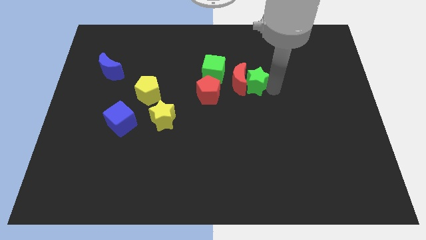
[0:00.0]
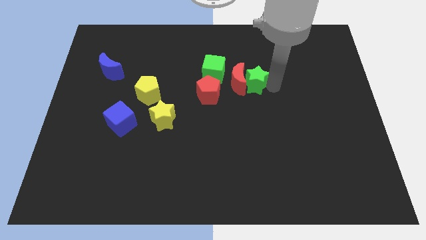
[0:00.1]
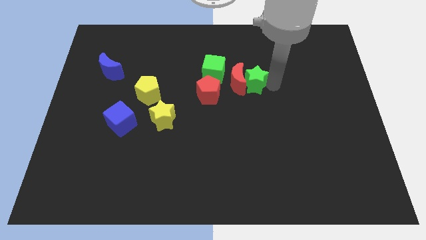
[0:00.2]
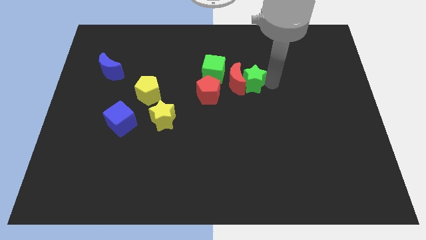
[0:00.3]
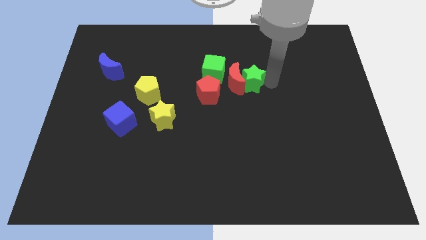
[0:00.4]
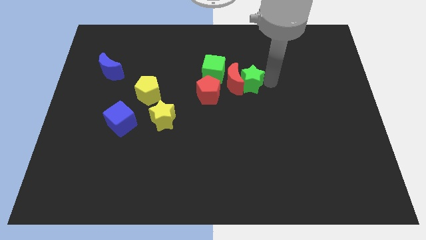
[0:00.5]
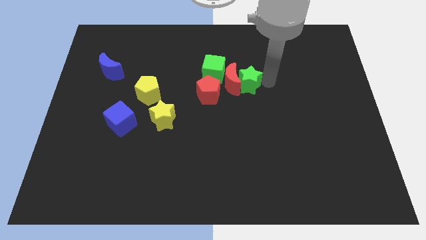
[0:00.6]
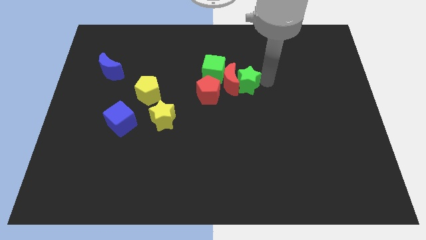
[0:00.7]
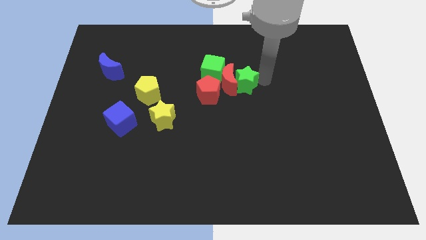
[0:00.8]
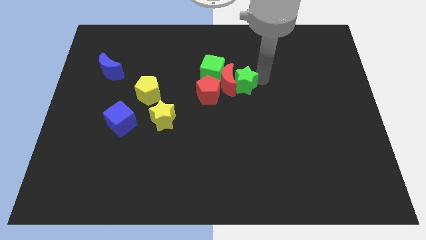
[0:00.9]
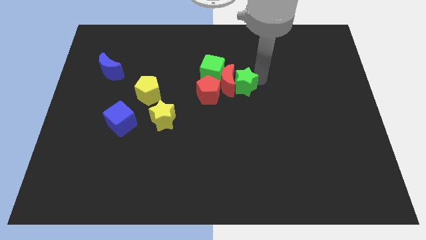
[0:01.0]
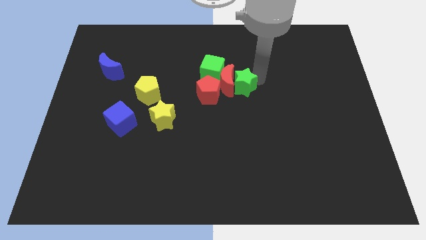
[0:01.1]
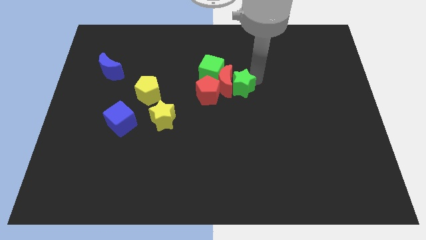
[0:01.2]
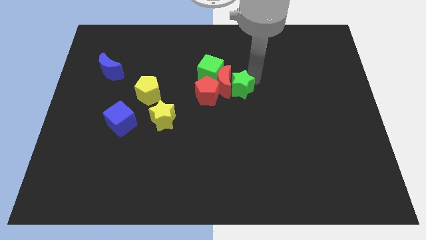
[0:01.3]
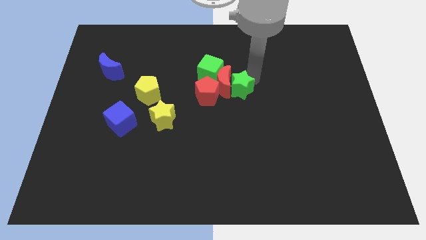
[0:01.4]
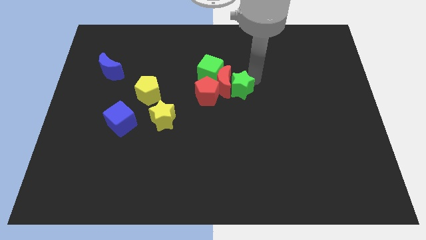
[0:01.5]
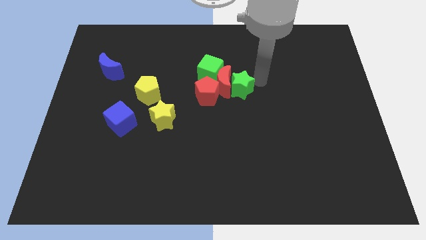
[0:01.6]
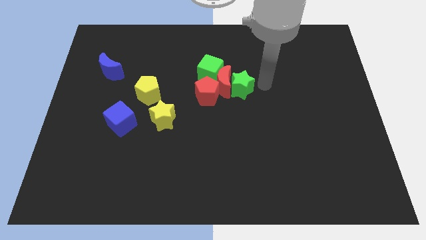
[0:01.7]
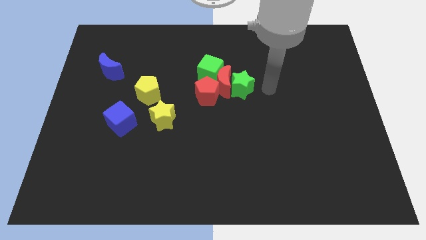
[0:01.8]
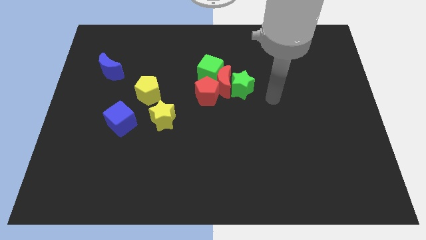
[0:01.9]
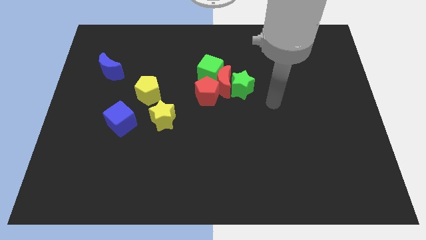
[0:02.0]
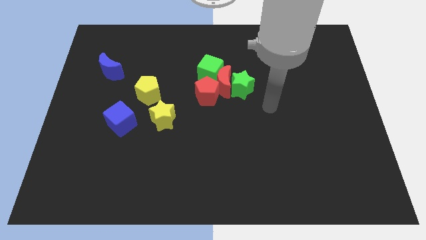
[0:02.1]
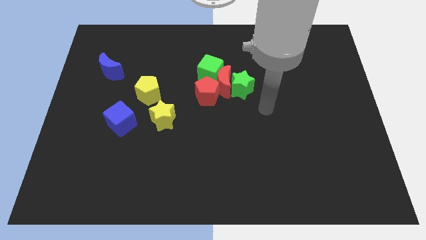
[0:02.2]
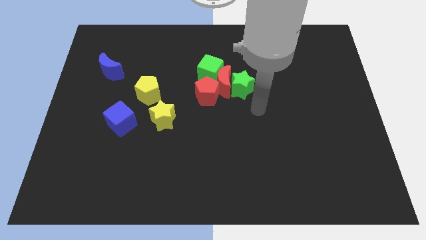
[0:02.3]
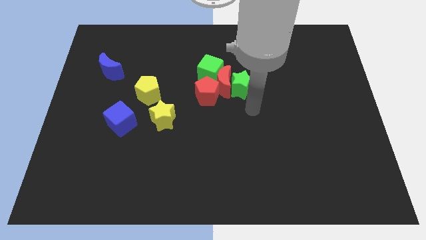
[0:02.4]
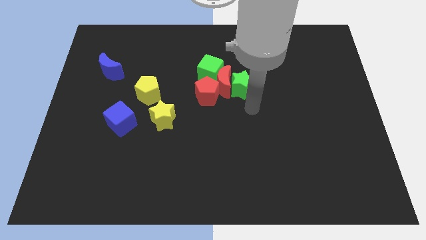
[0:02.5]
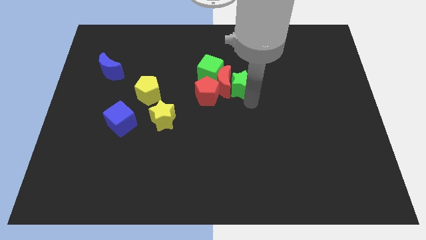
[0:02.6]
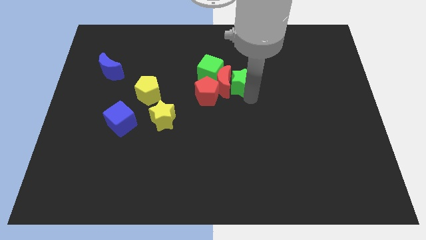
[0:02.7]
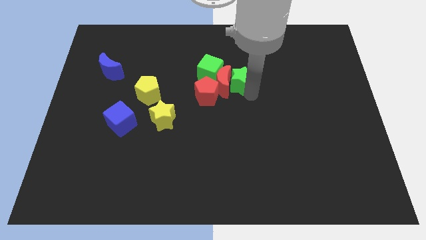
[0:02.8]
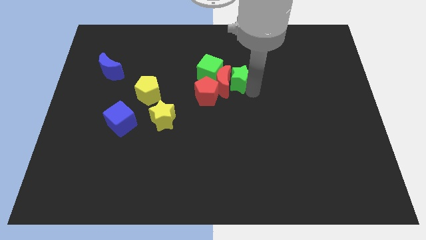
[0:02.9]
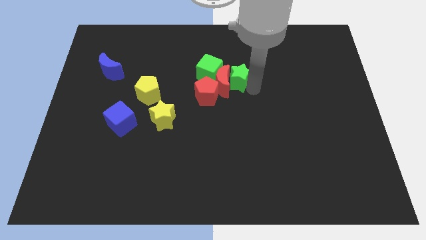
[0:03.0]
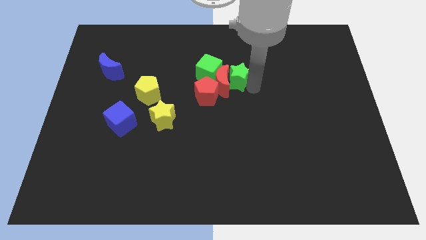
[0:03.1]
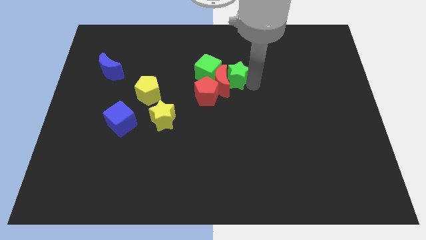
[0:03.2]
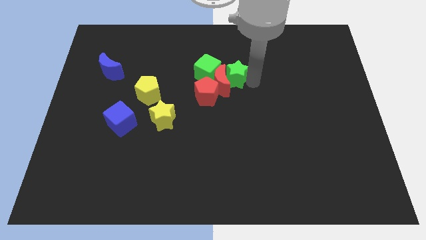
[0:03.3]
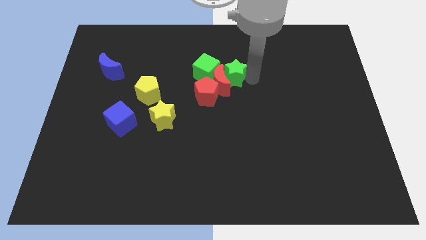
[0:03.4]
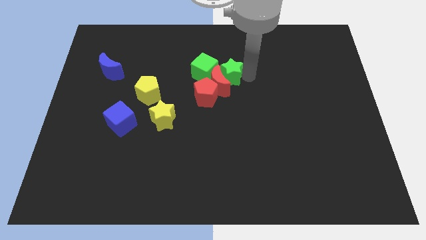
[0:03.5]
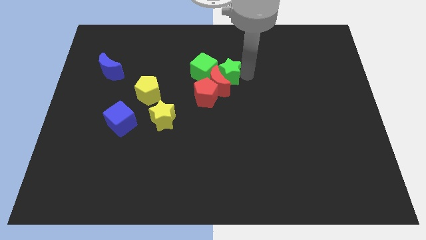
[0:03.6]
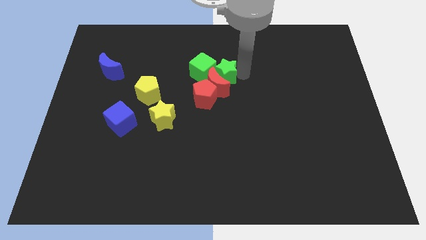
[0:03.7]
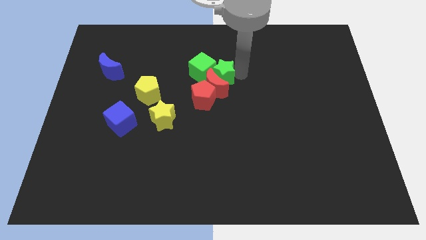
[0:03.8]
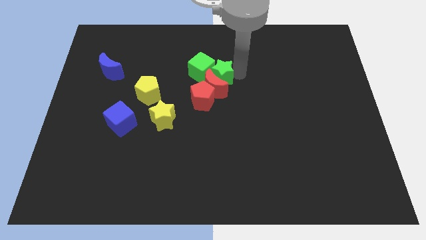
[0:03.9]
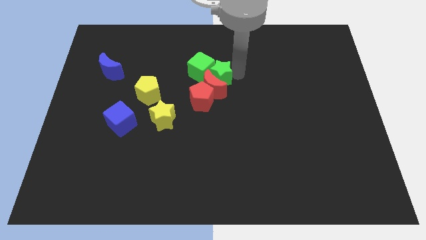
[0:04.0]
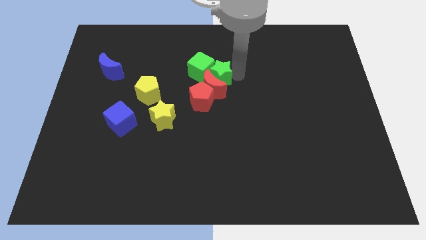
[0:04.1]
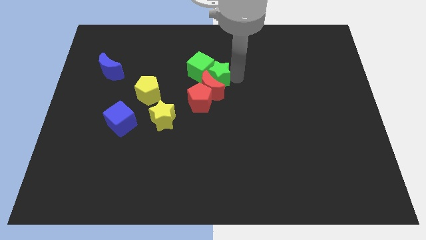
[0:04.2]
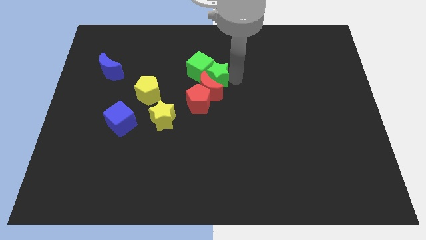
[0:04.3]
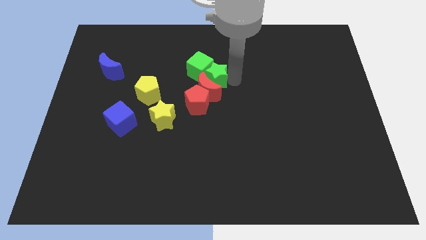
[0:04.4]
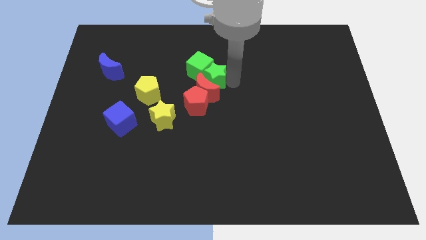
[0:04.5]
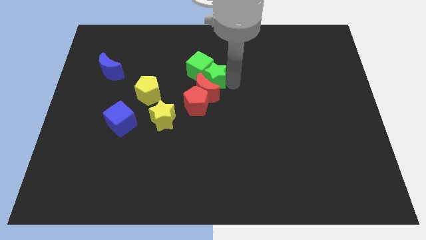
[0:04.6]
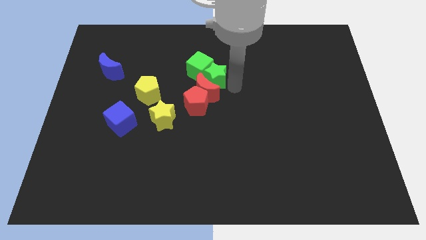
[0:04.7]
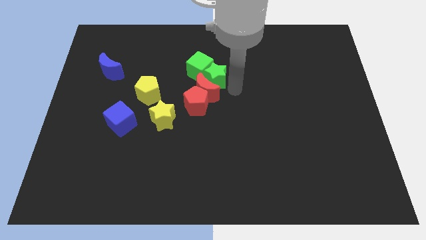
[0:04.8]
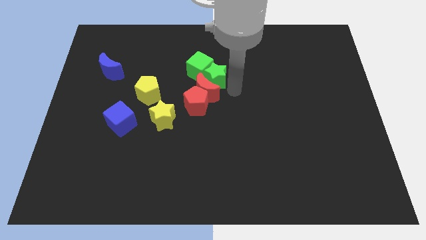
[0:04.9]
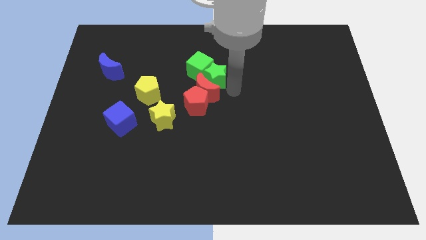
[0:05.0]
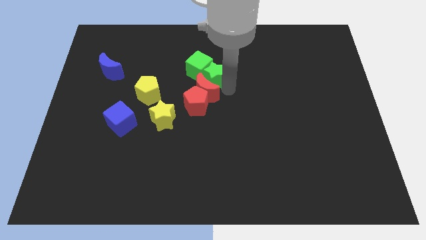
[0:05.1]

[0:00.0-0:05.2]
slide the green star and the green cube to the top side of the red moon

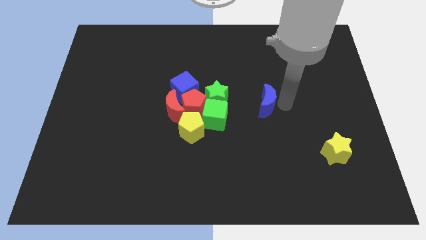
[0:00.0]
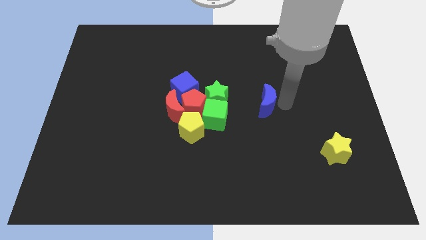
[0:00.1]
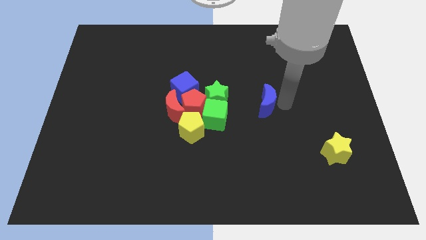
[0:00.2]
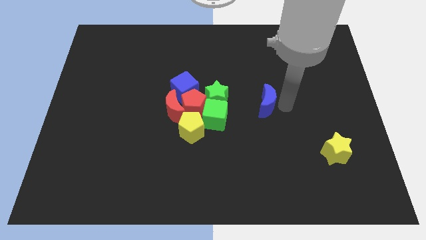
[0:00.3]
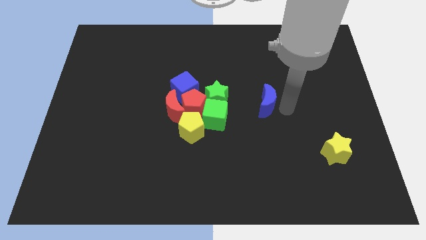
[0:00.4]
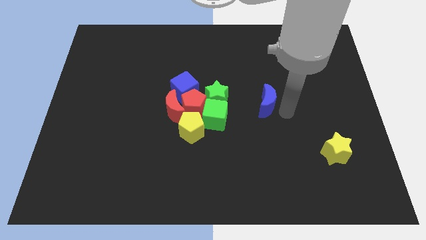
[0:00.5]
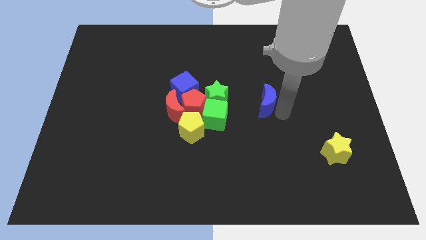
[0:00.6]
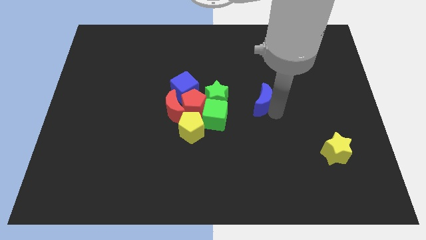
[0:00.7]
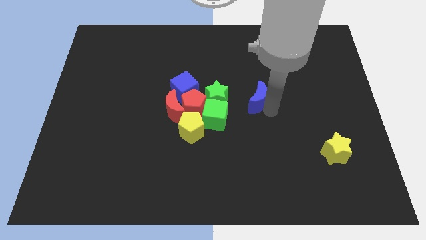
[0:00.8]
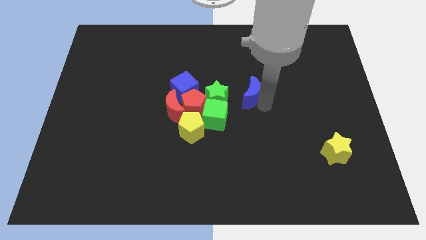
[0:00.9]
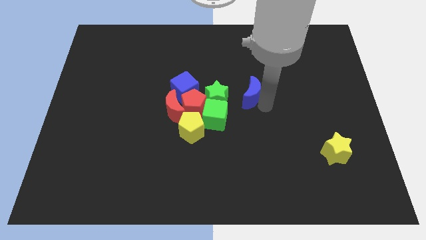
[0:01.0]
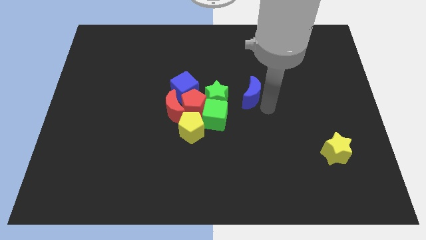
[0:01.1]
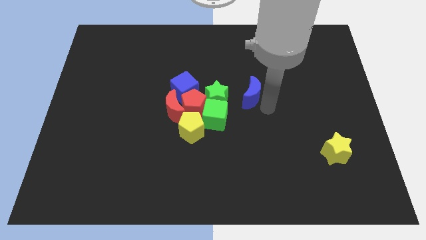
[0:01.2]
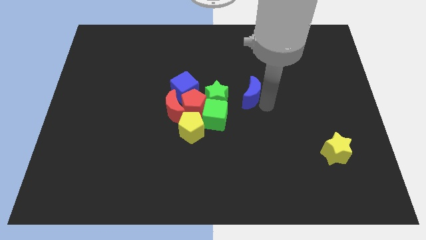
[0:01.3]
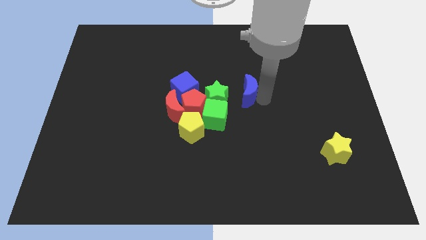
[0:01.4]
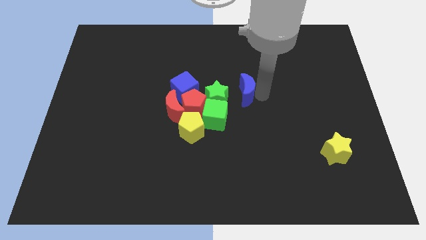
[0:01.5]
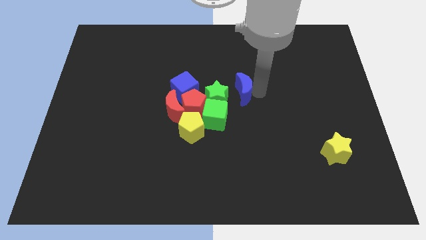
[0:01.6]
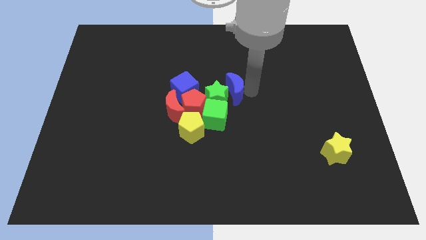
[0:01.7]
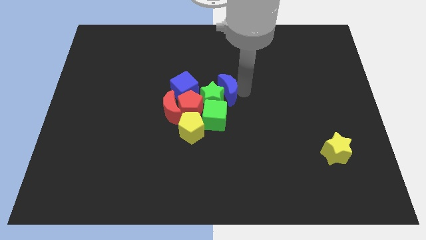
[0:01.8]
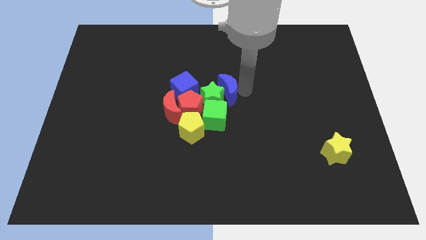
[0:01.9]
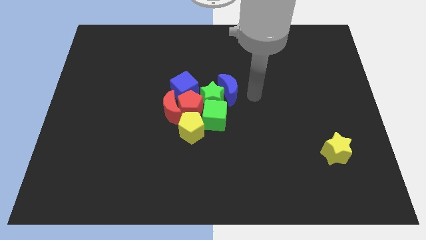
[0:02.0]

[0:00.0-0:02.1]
push the blue crescent towards the green star

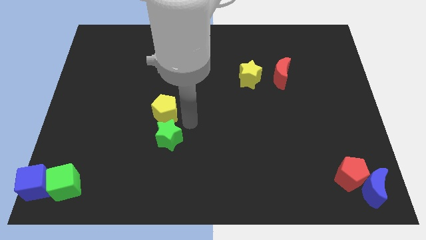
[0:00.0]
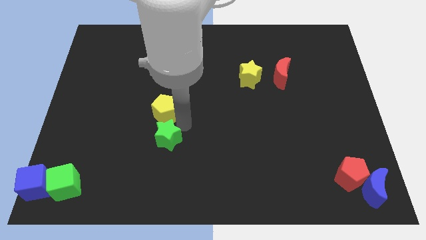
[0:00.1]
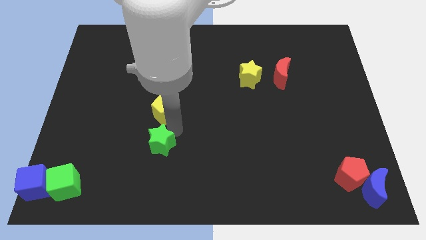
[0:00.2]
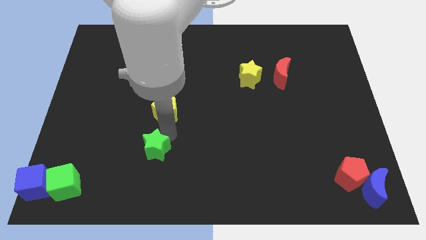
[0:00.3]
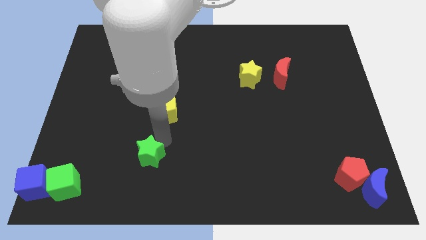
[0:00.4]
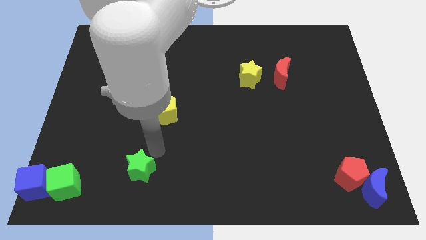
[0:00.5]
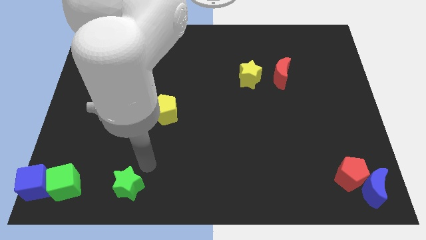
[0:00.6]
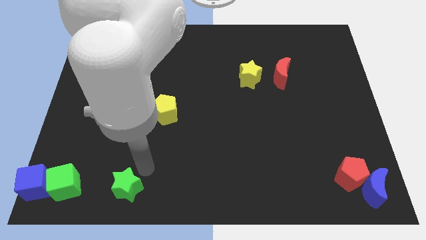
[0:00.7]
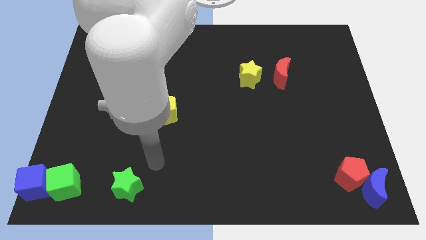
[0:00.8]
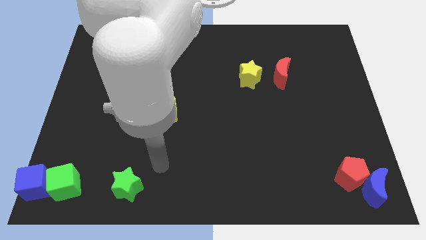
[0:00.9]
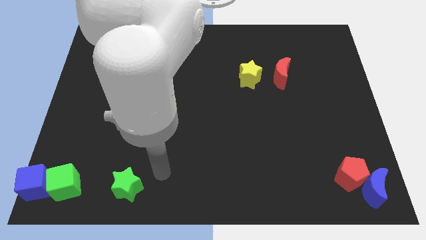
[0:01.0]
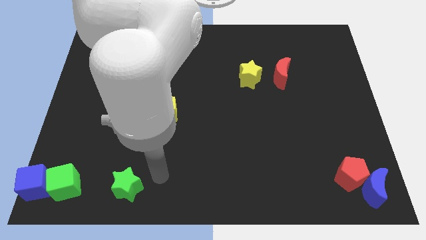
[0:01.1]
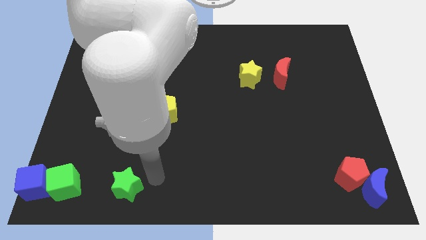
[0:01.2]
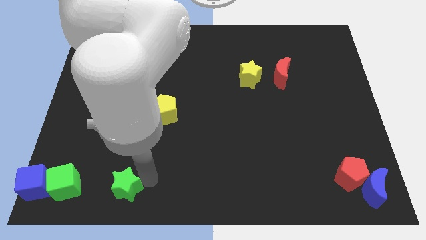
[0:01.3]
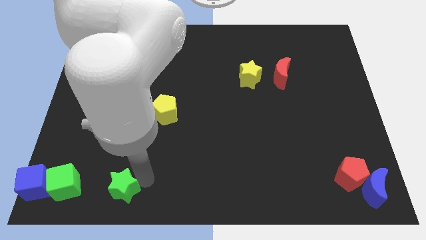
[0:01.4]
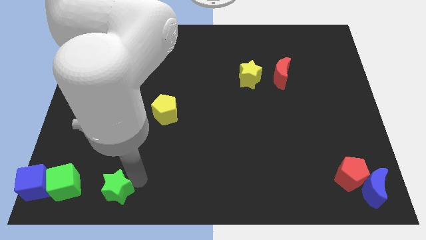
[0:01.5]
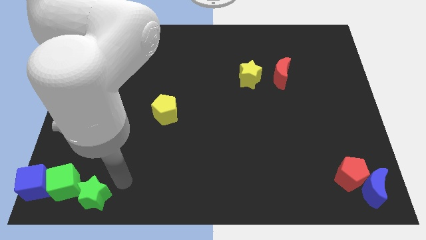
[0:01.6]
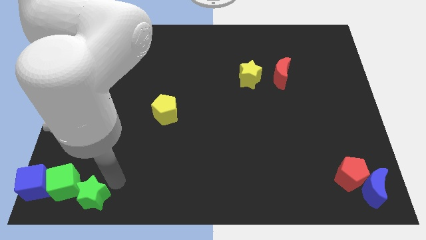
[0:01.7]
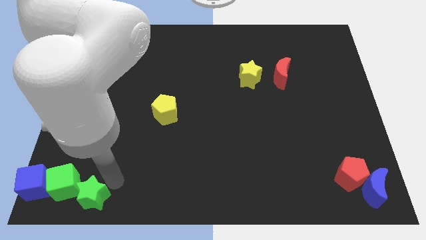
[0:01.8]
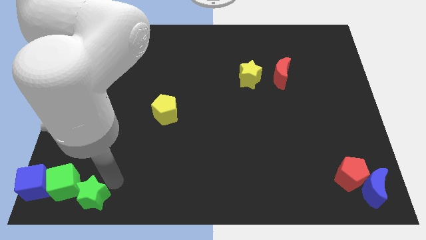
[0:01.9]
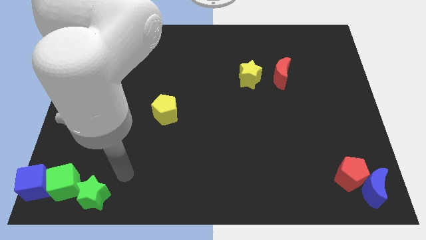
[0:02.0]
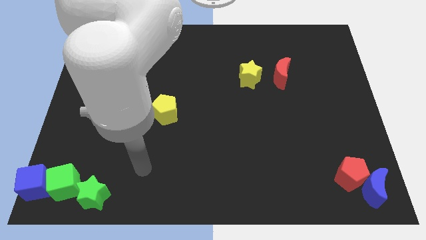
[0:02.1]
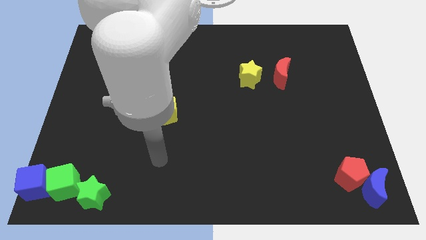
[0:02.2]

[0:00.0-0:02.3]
place the green star to the right of the green cube
